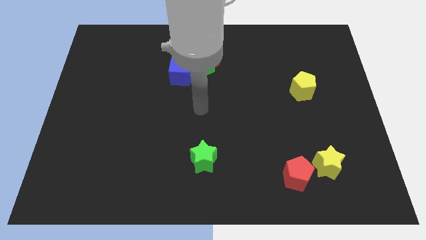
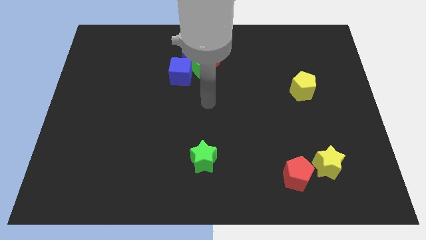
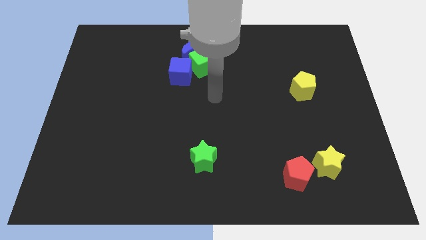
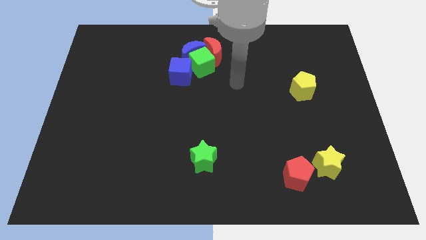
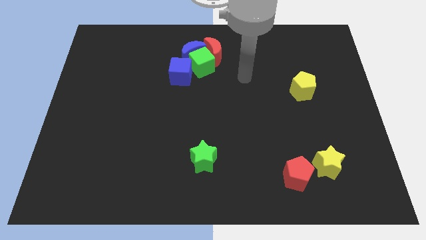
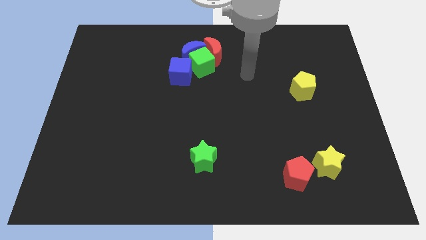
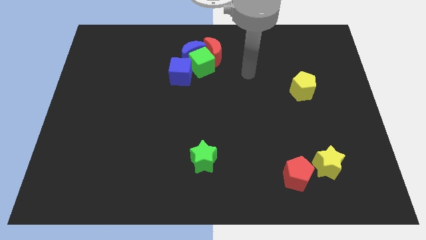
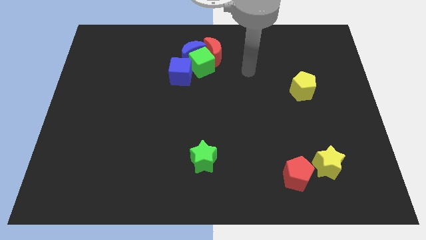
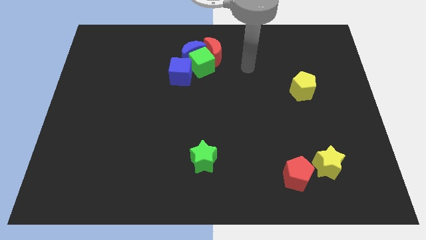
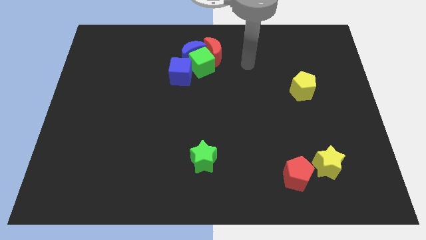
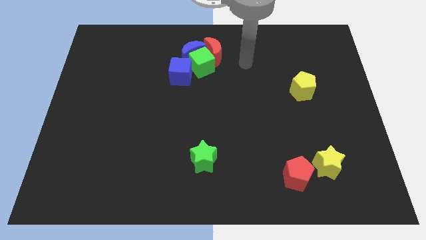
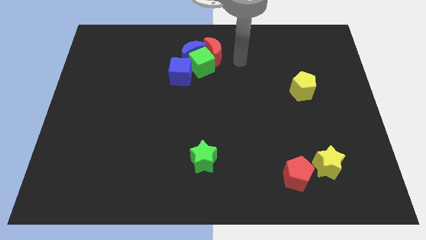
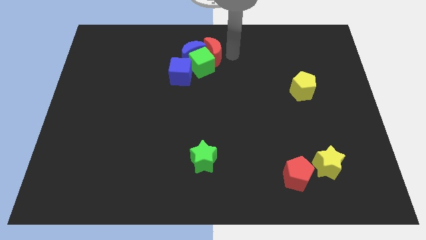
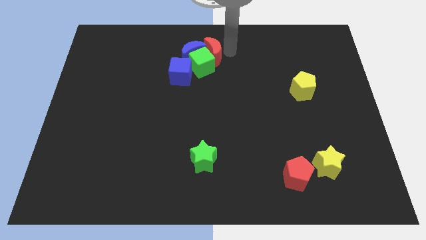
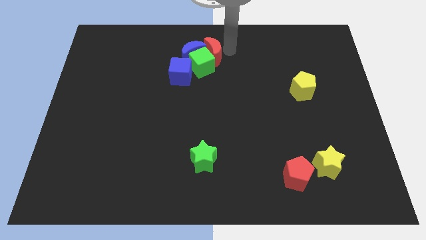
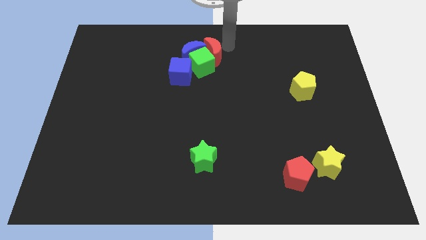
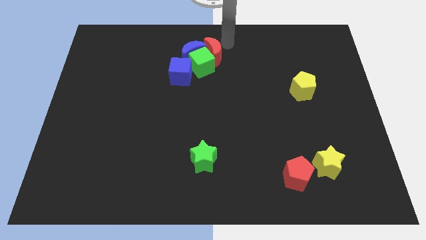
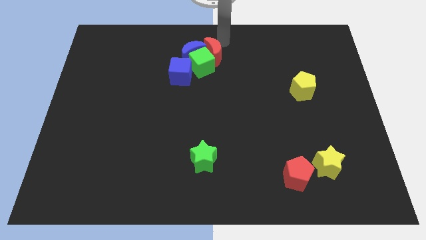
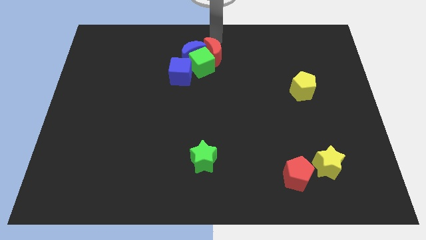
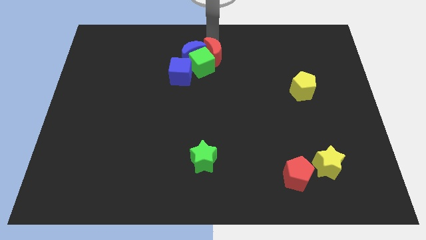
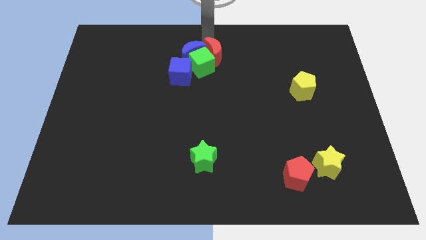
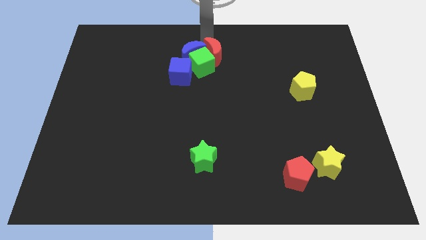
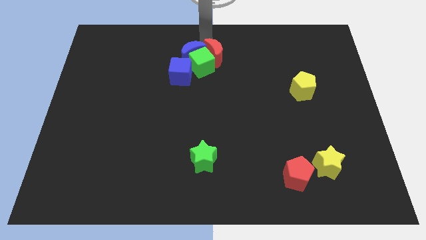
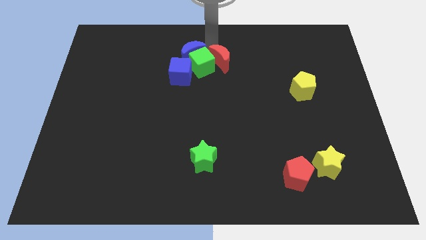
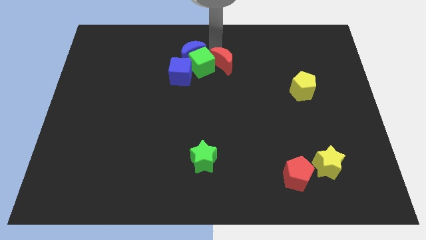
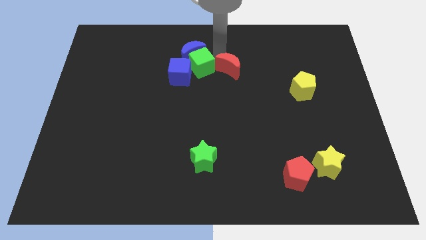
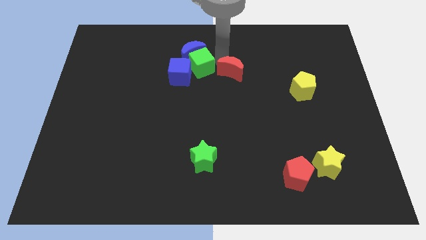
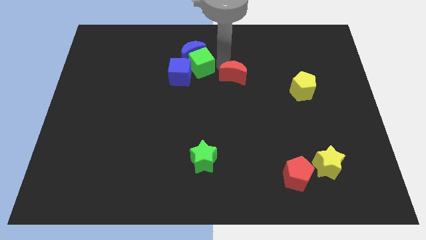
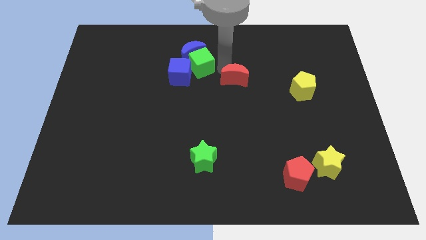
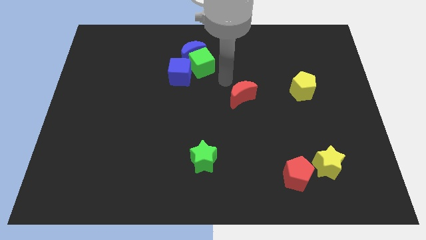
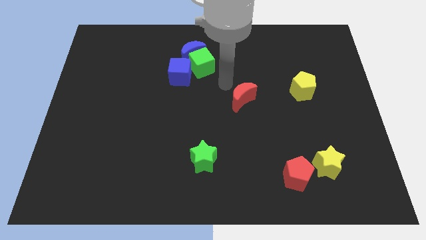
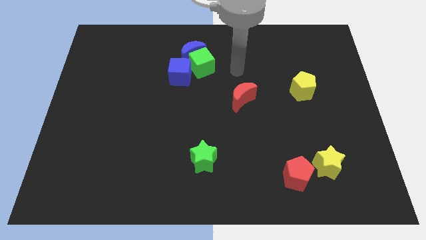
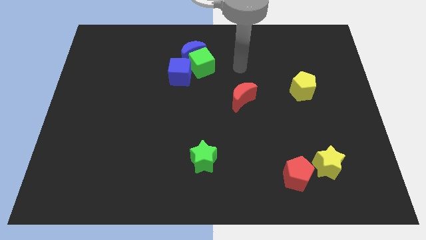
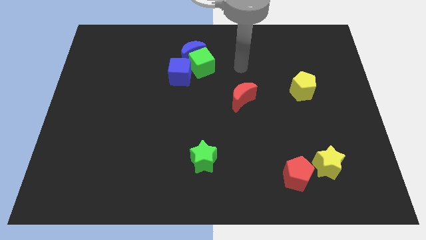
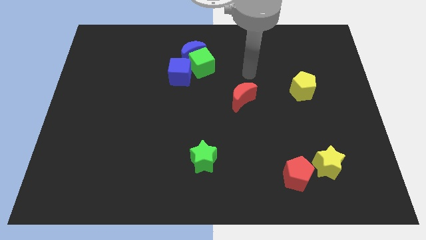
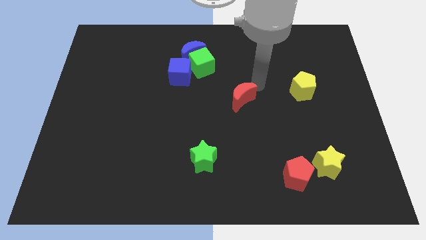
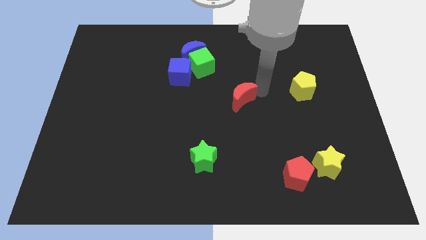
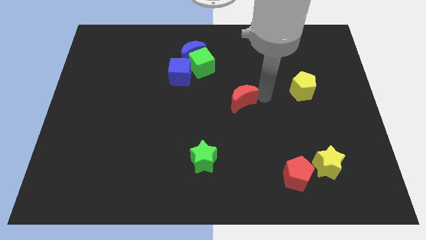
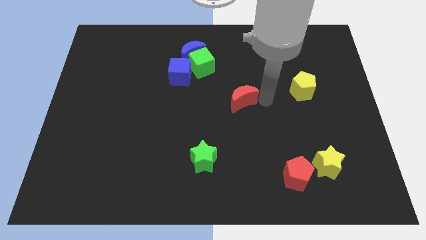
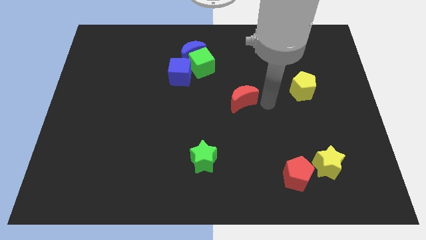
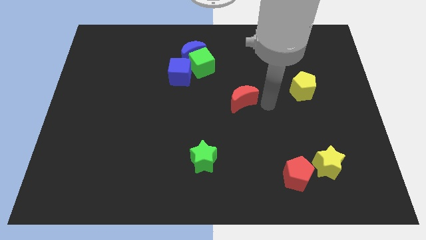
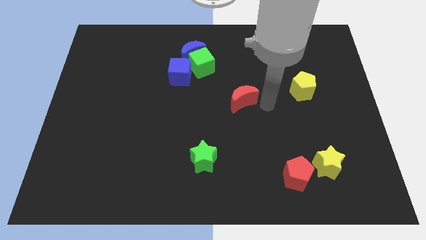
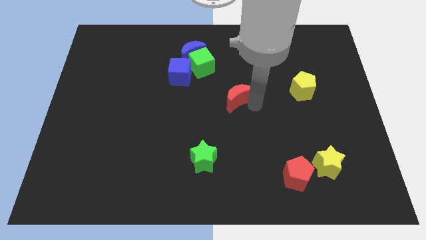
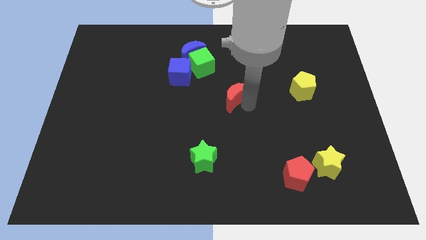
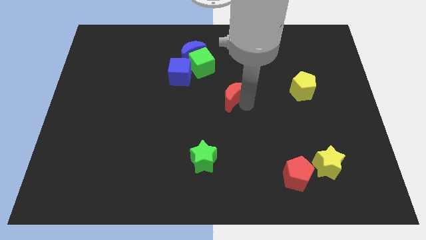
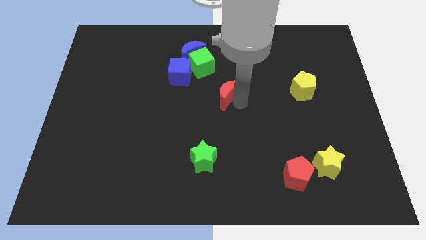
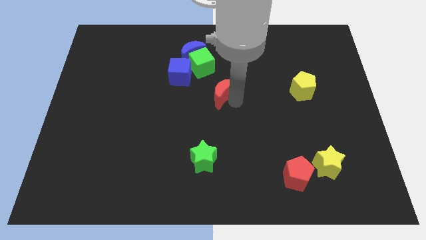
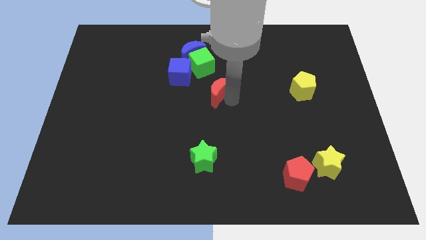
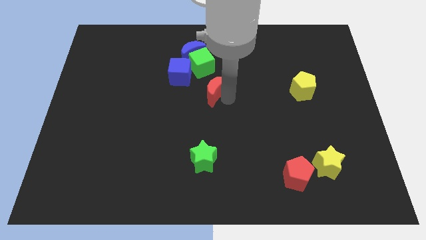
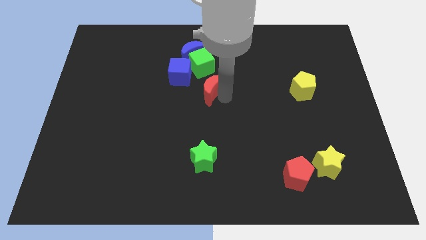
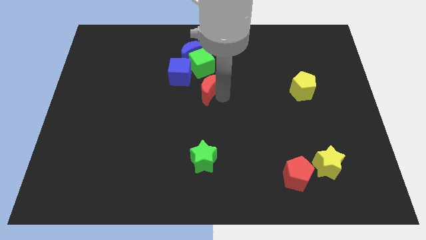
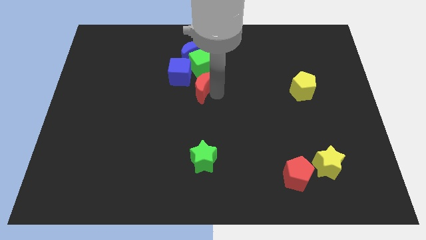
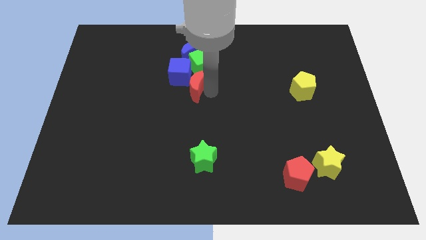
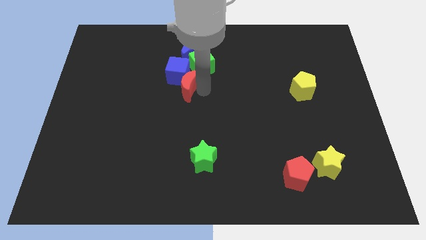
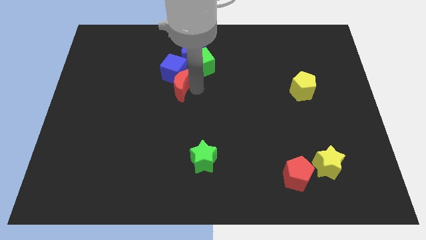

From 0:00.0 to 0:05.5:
put the red moon towards the blue cube

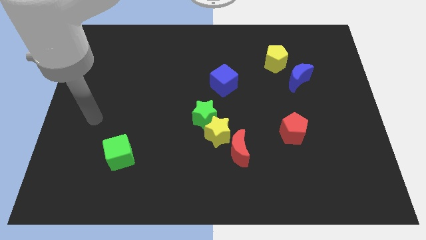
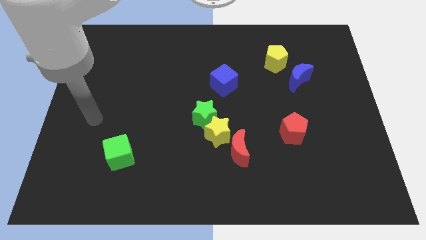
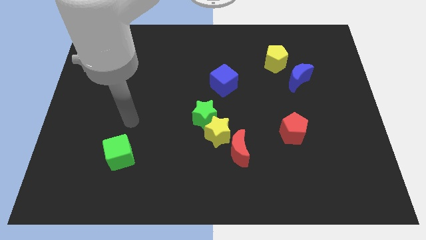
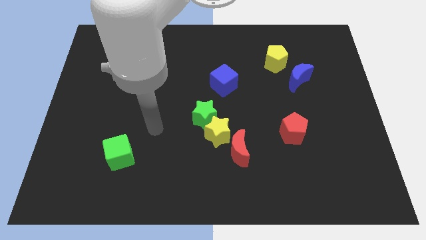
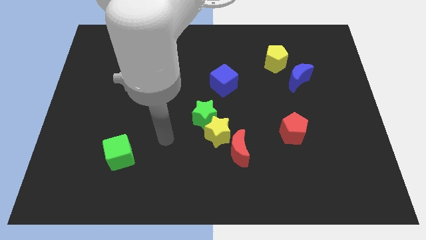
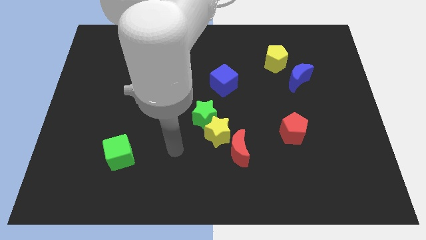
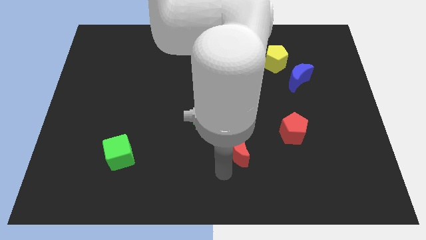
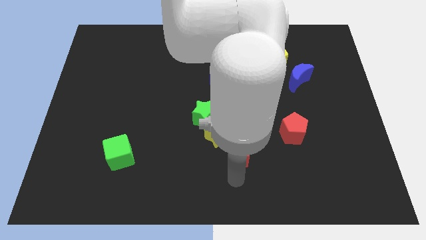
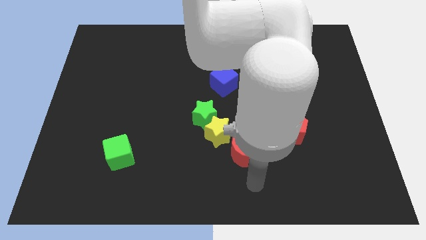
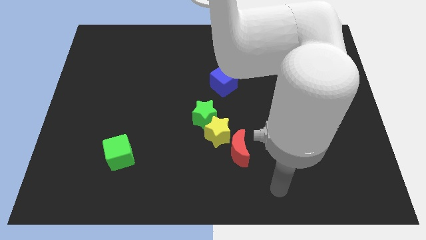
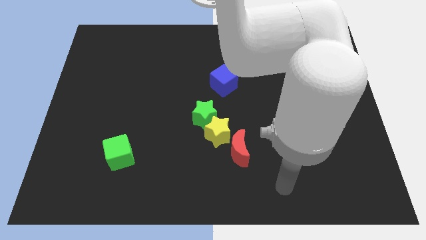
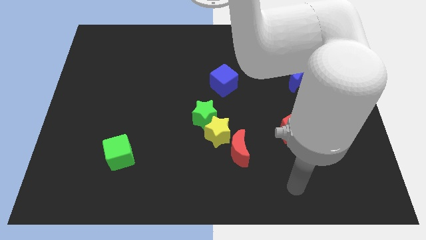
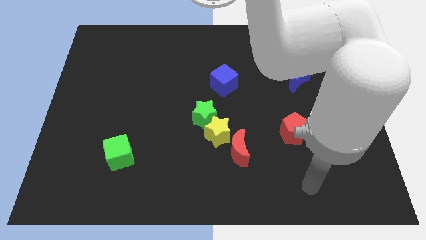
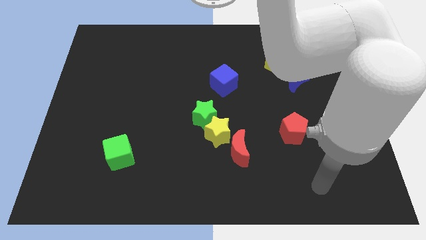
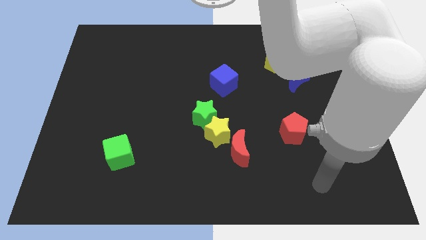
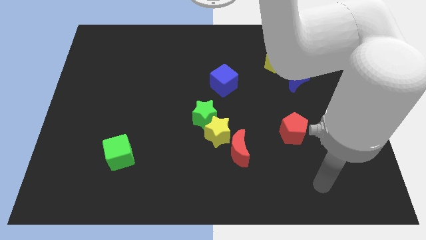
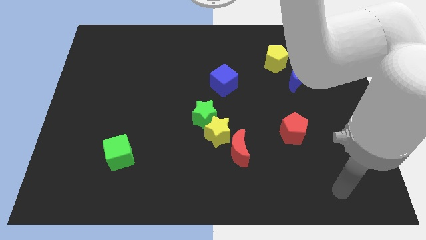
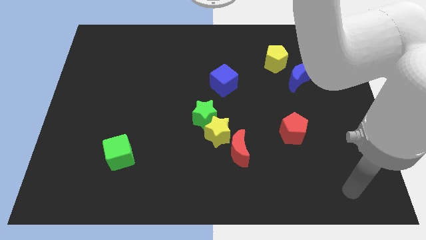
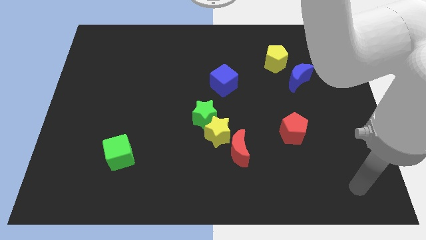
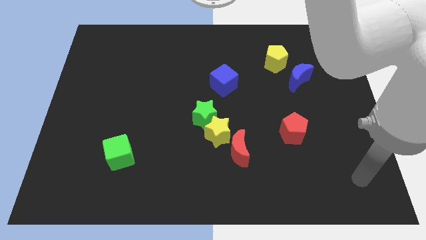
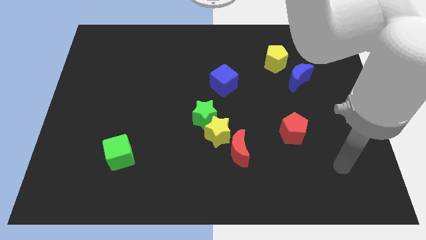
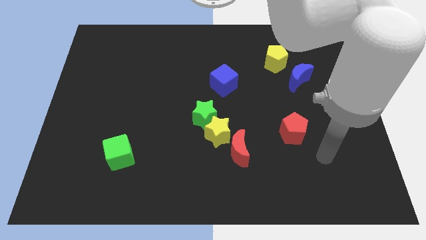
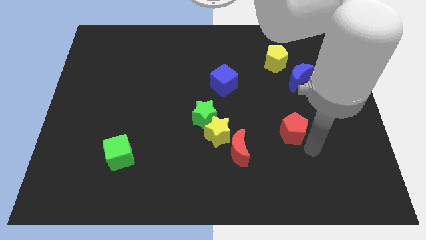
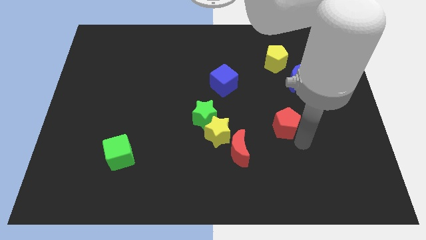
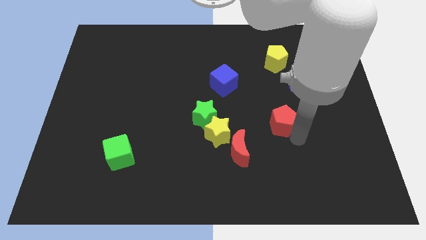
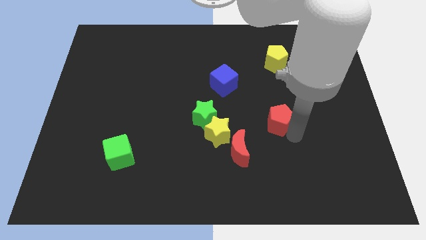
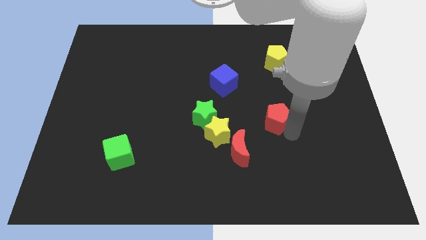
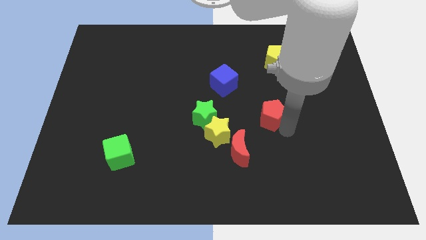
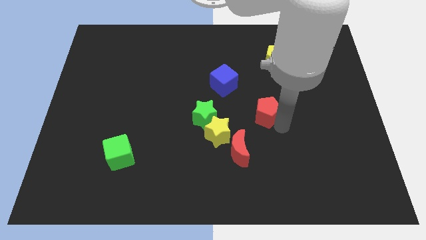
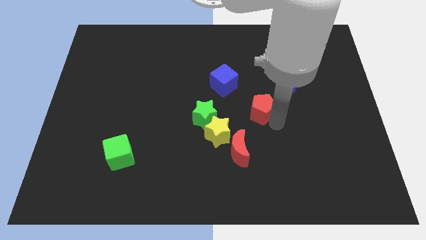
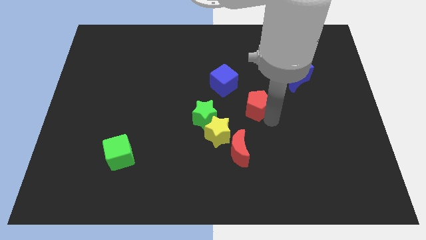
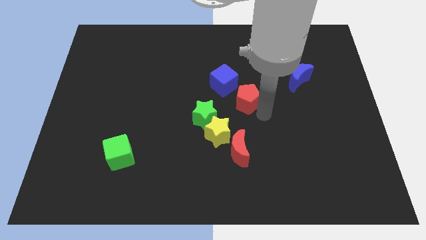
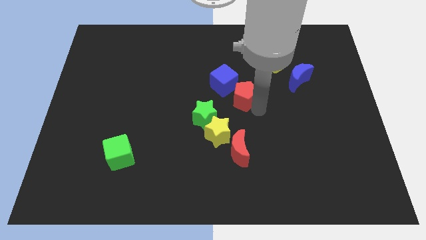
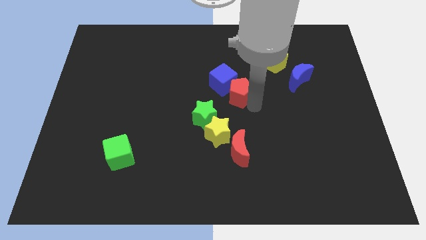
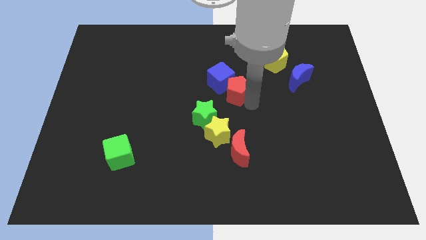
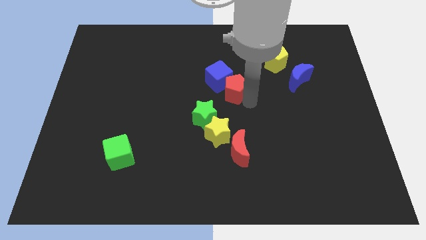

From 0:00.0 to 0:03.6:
move the red pentagon to the blue cube
